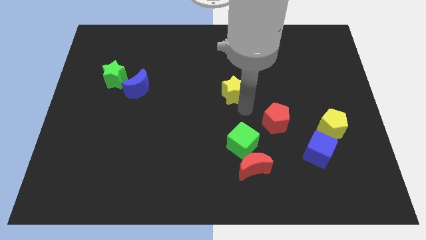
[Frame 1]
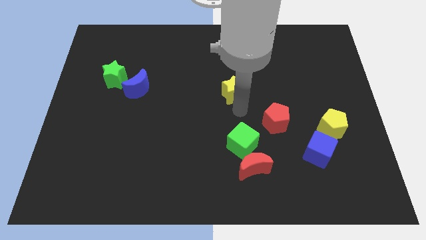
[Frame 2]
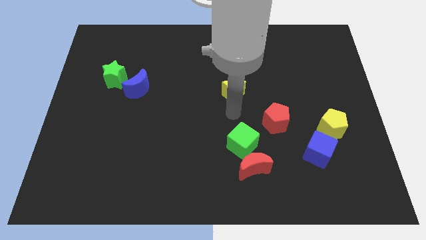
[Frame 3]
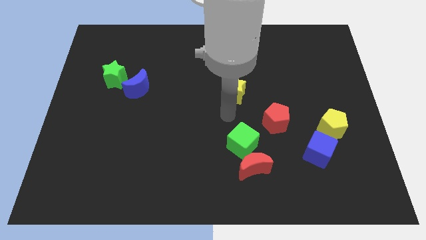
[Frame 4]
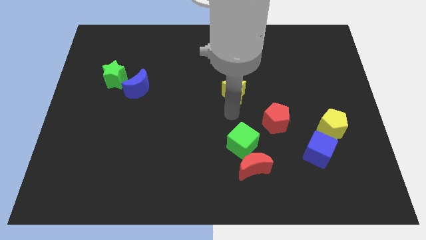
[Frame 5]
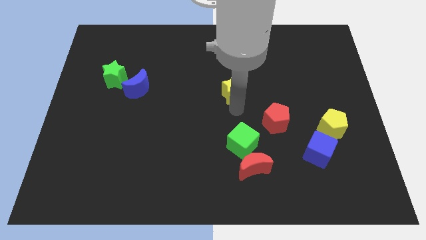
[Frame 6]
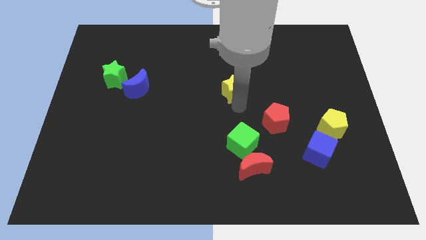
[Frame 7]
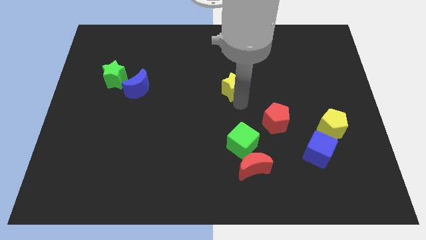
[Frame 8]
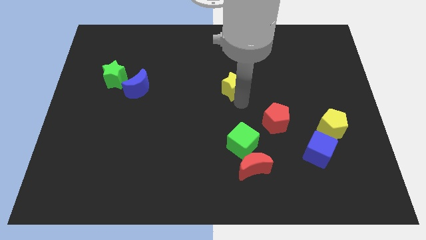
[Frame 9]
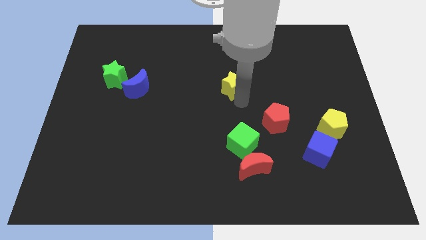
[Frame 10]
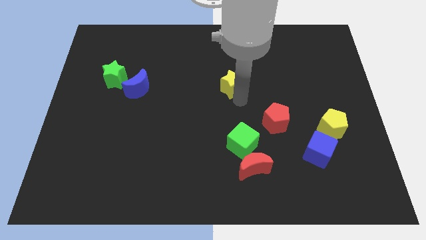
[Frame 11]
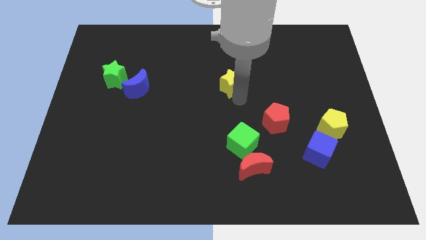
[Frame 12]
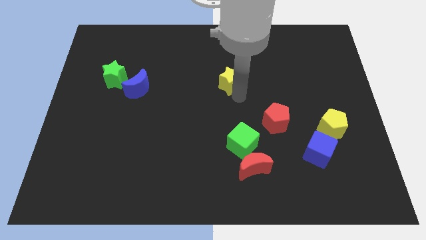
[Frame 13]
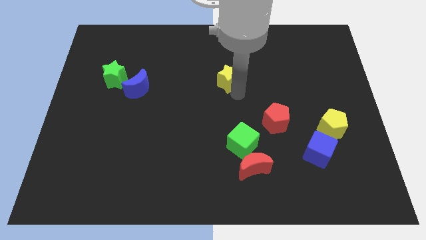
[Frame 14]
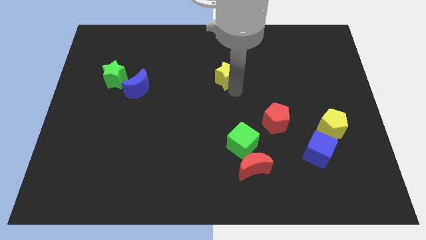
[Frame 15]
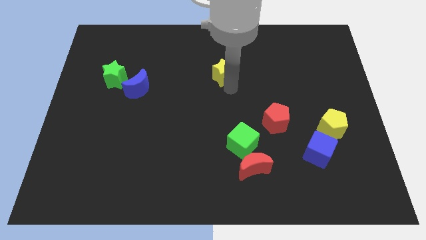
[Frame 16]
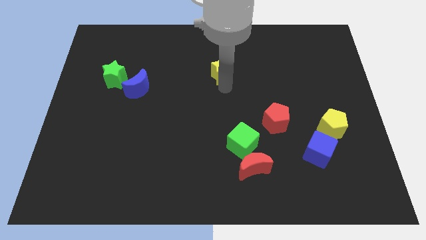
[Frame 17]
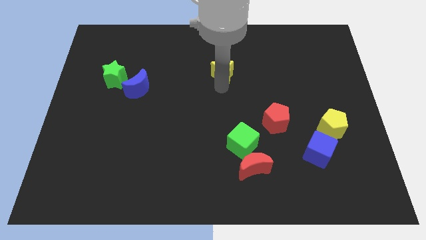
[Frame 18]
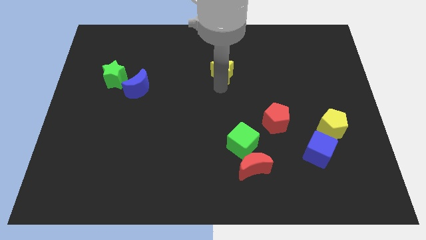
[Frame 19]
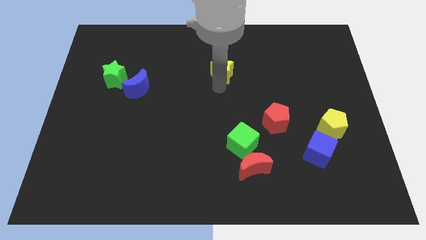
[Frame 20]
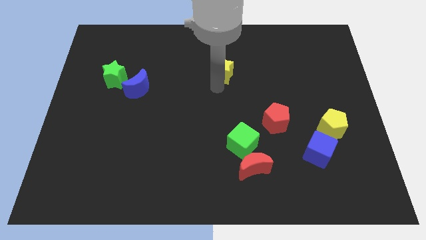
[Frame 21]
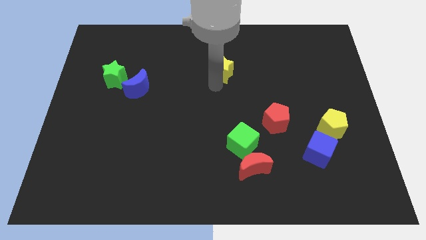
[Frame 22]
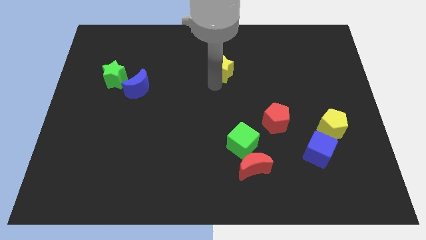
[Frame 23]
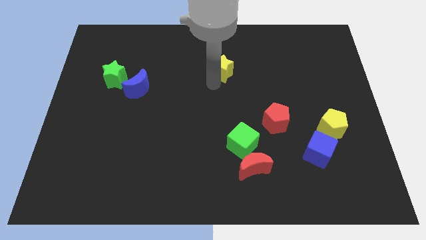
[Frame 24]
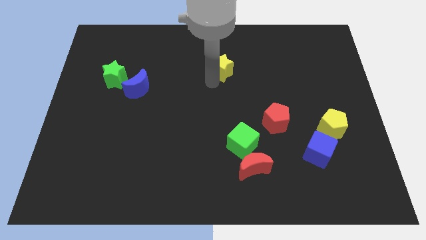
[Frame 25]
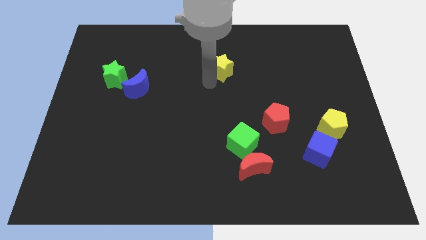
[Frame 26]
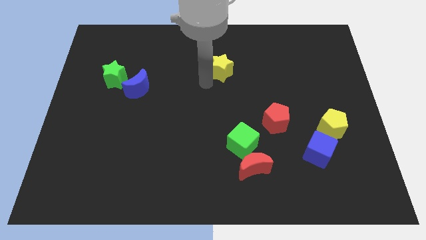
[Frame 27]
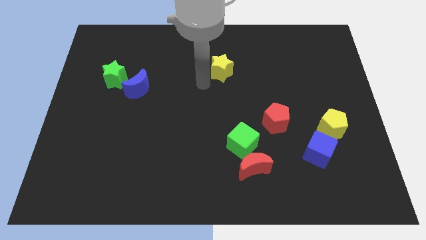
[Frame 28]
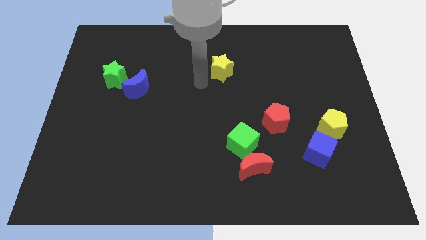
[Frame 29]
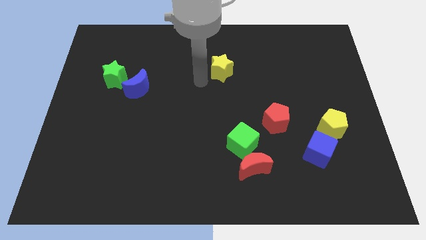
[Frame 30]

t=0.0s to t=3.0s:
push the yellow star slightly to the top

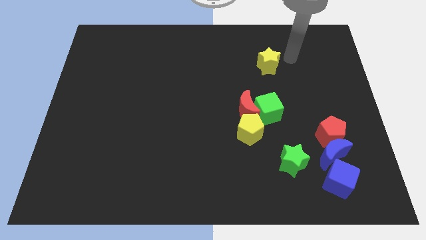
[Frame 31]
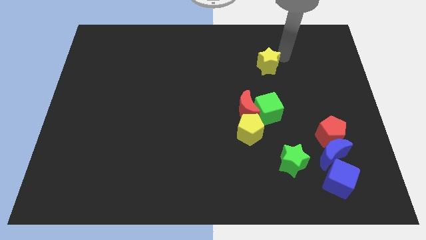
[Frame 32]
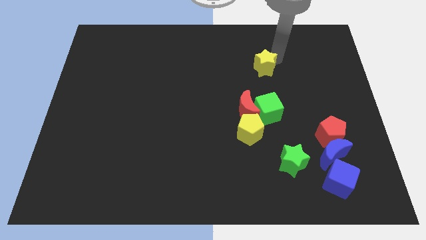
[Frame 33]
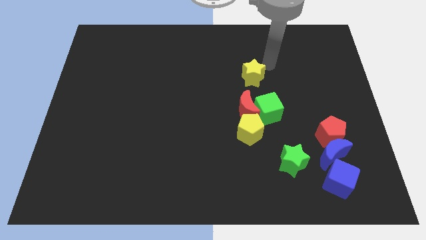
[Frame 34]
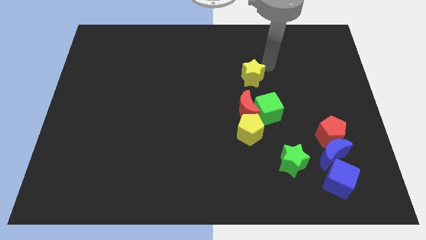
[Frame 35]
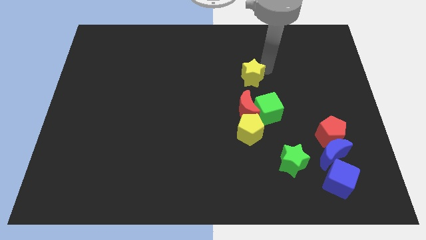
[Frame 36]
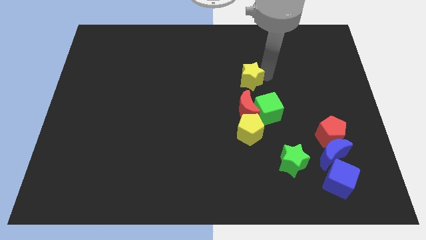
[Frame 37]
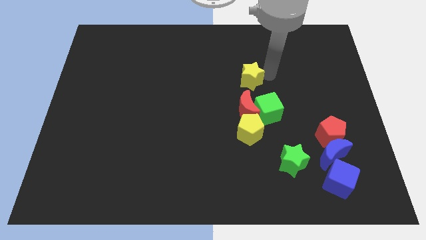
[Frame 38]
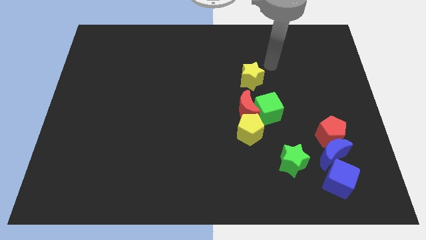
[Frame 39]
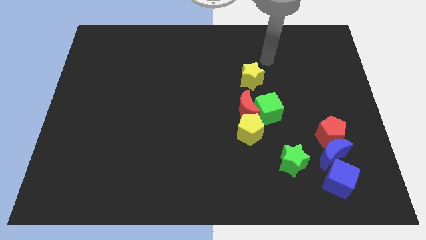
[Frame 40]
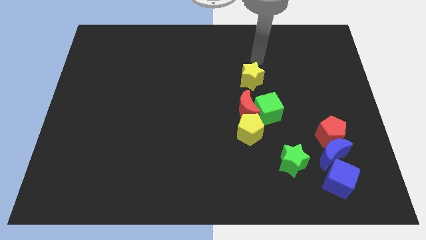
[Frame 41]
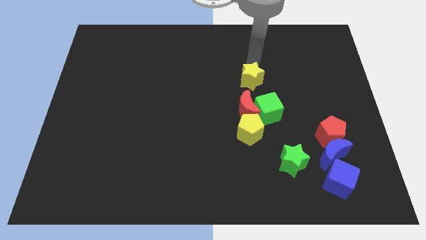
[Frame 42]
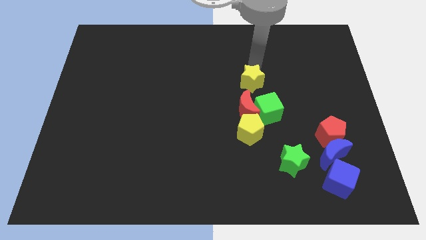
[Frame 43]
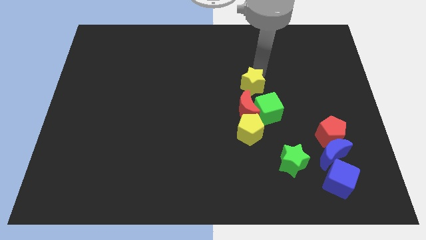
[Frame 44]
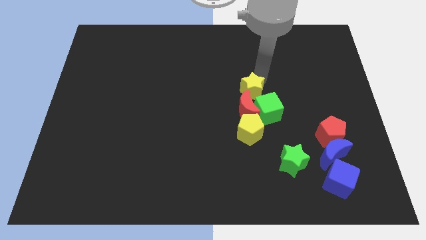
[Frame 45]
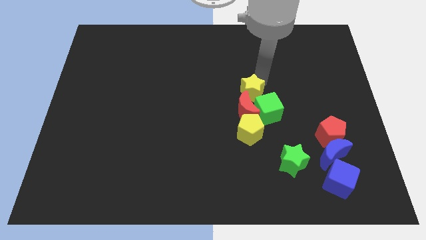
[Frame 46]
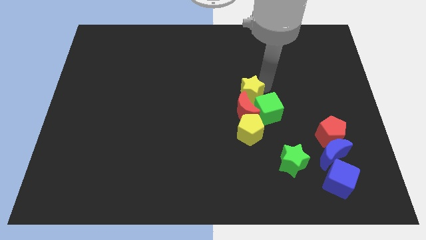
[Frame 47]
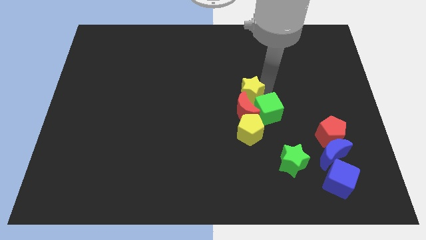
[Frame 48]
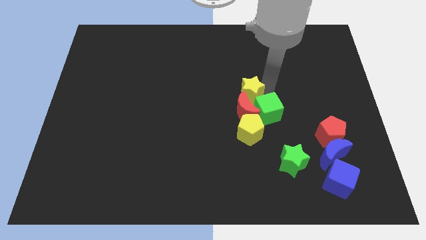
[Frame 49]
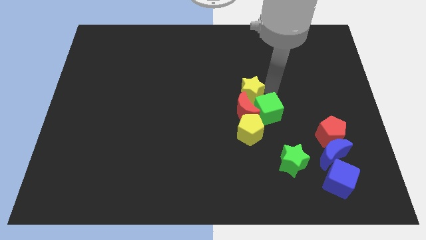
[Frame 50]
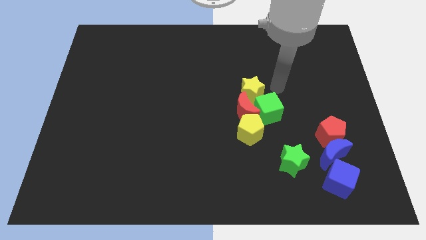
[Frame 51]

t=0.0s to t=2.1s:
push the yellow star into the group of objects

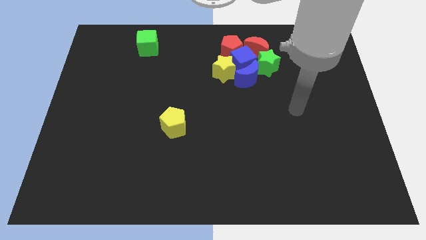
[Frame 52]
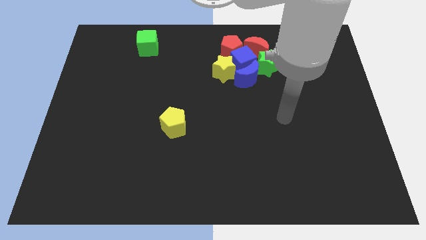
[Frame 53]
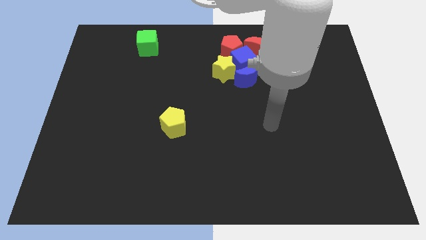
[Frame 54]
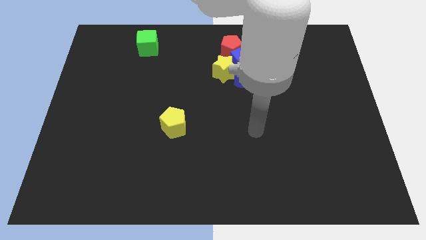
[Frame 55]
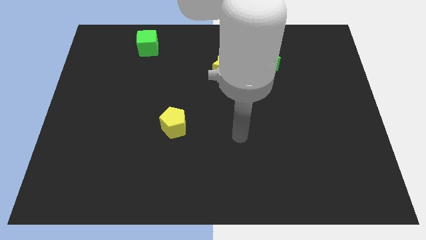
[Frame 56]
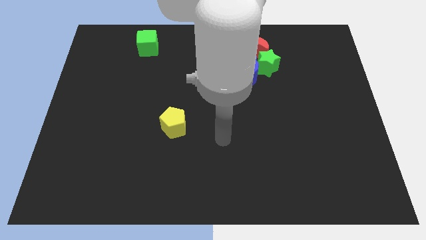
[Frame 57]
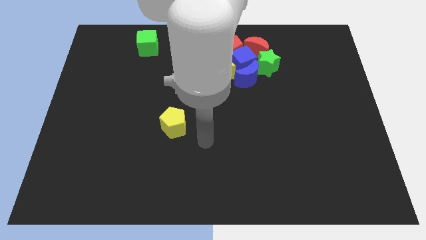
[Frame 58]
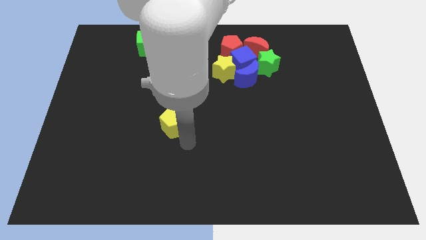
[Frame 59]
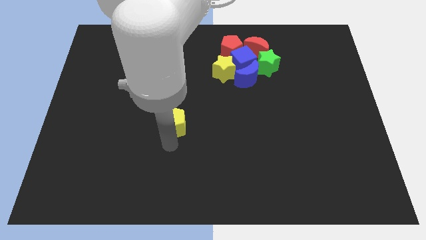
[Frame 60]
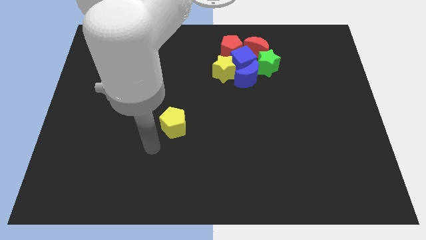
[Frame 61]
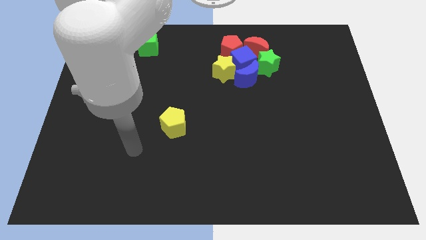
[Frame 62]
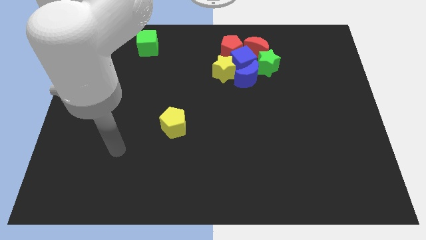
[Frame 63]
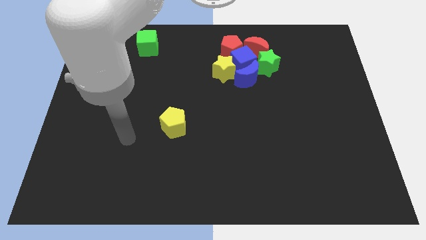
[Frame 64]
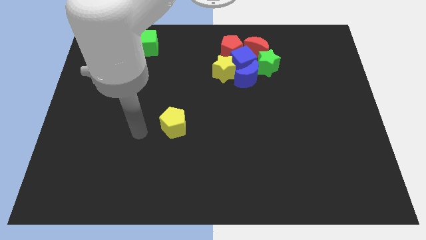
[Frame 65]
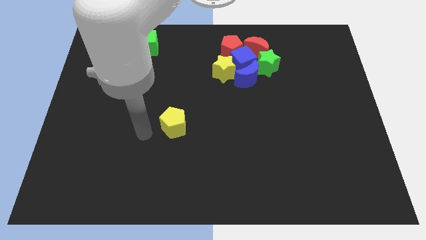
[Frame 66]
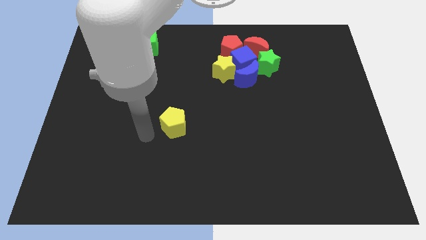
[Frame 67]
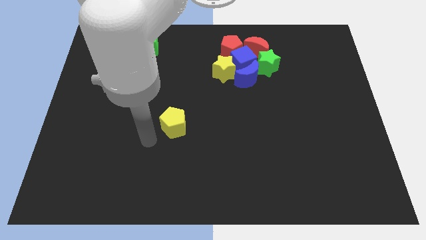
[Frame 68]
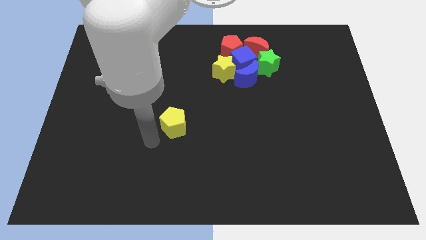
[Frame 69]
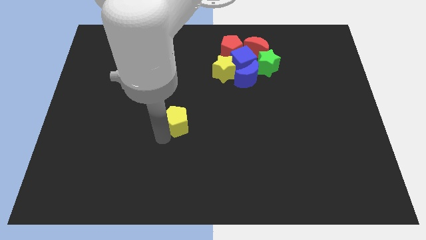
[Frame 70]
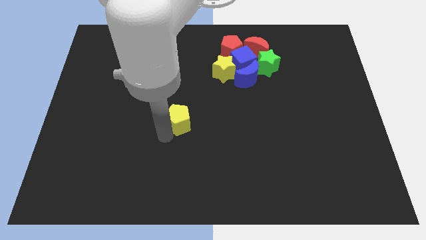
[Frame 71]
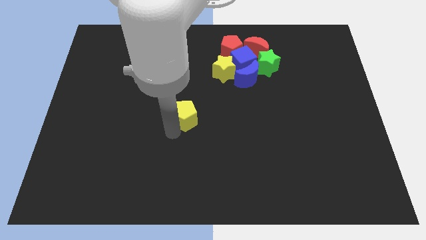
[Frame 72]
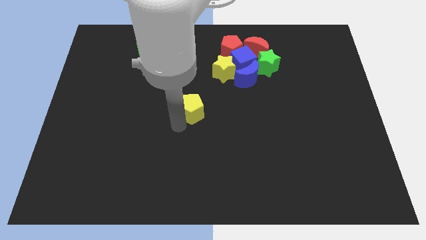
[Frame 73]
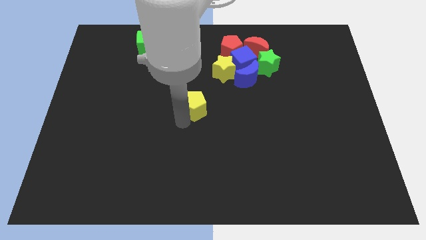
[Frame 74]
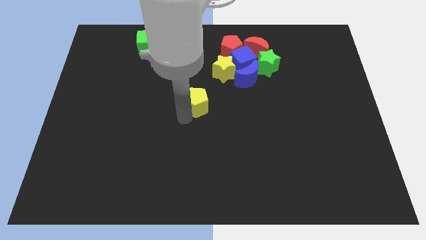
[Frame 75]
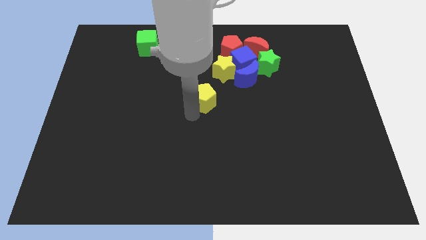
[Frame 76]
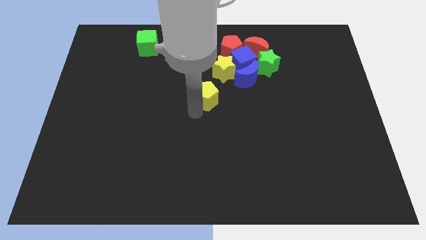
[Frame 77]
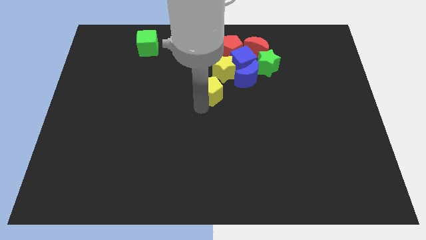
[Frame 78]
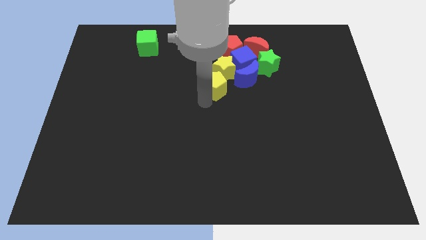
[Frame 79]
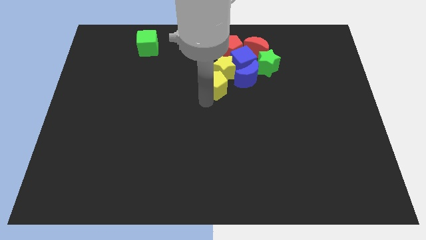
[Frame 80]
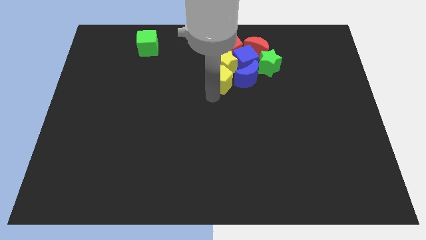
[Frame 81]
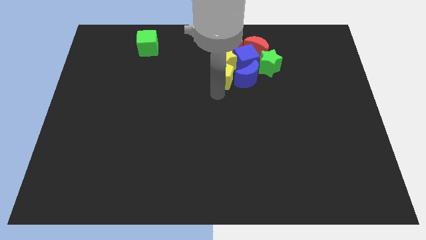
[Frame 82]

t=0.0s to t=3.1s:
add yellow pentagon into yellow star

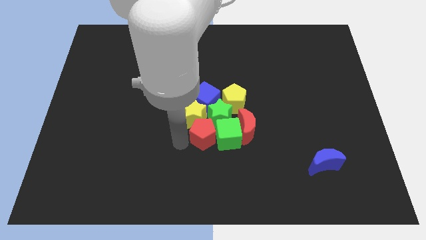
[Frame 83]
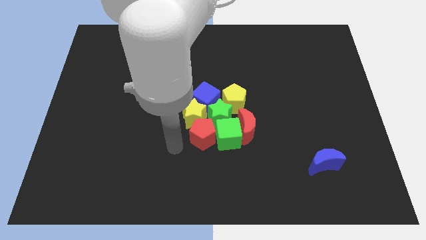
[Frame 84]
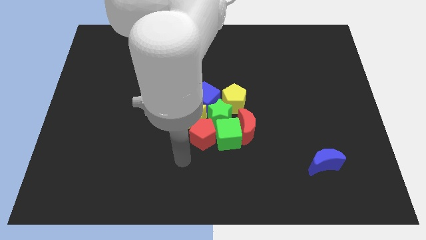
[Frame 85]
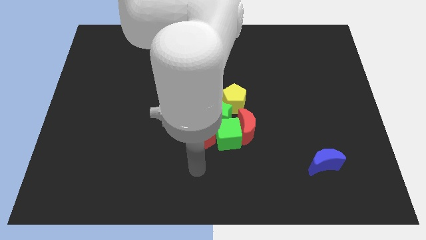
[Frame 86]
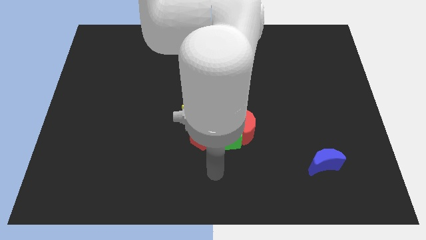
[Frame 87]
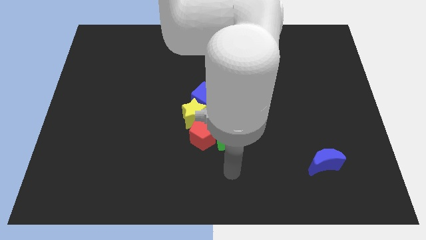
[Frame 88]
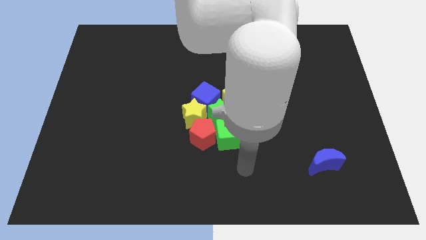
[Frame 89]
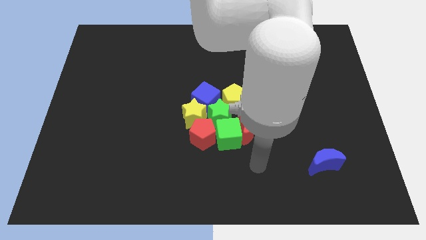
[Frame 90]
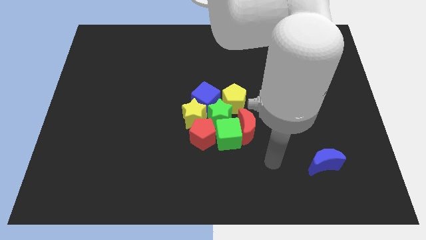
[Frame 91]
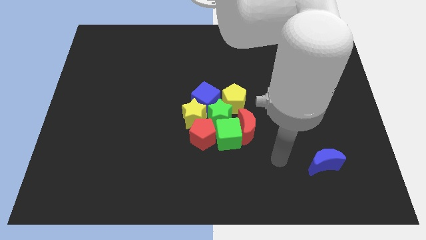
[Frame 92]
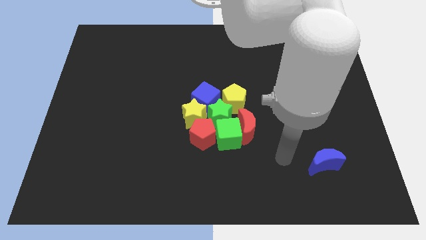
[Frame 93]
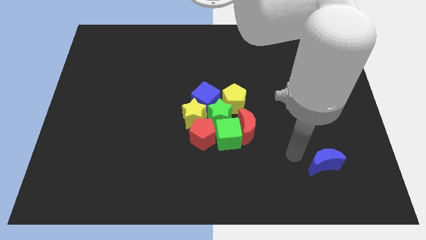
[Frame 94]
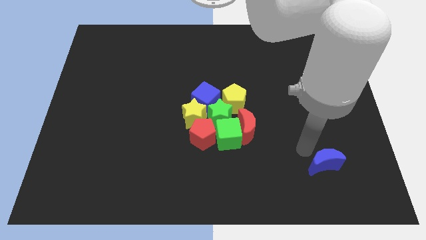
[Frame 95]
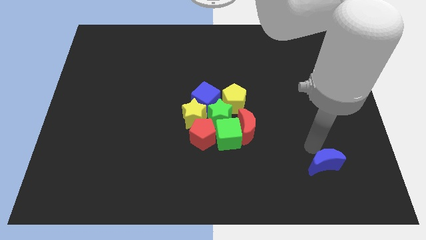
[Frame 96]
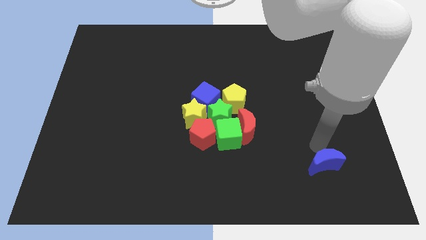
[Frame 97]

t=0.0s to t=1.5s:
move your arm away from red pentagon
